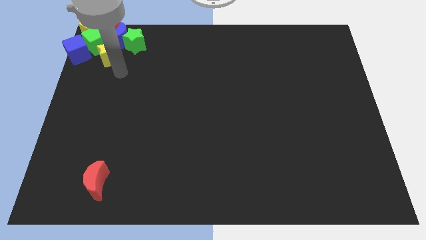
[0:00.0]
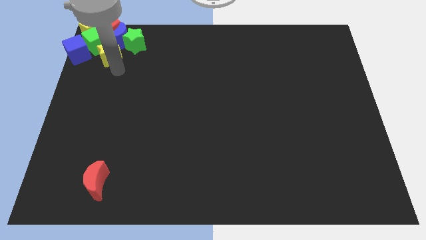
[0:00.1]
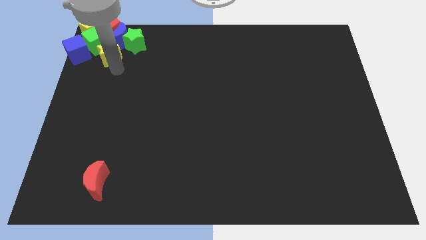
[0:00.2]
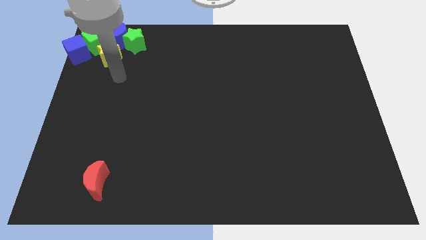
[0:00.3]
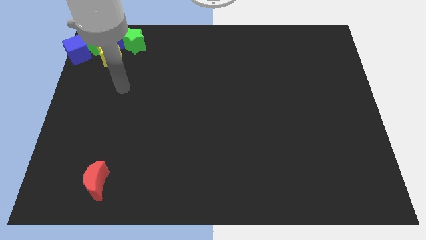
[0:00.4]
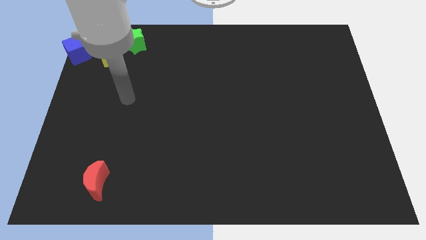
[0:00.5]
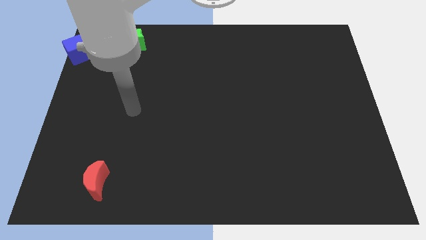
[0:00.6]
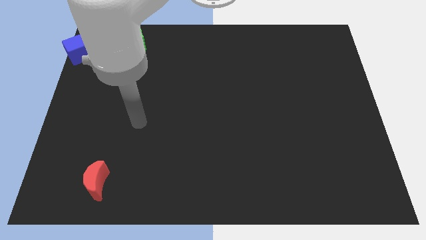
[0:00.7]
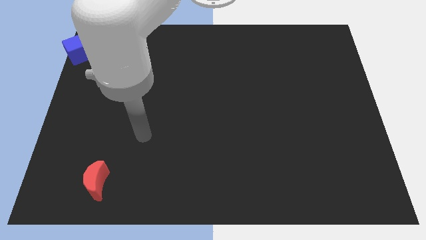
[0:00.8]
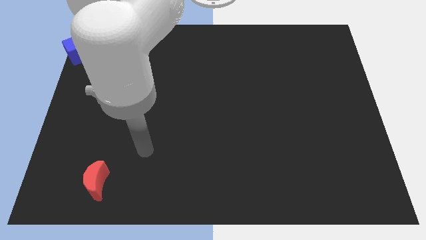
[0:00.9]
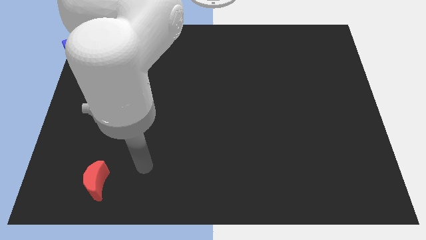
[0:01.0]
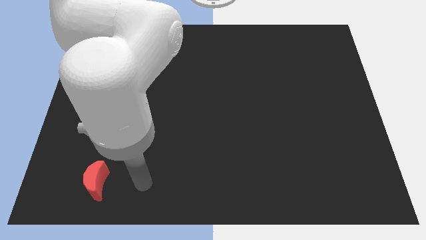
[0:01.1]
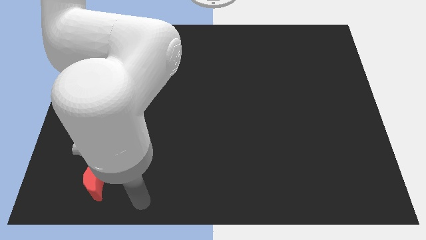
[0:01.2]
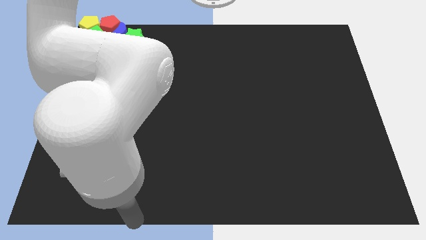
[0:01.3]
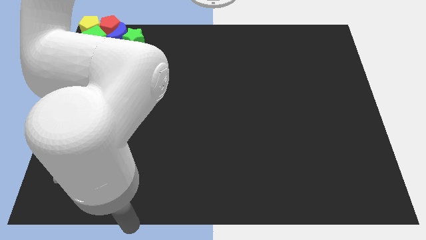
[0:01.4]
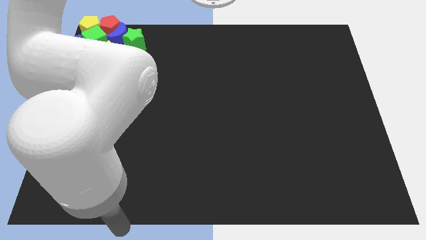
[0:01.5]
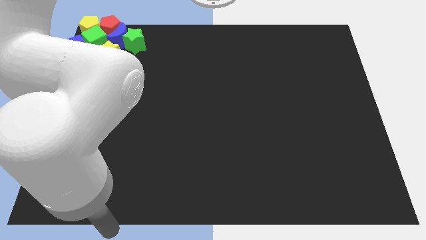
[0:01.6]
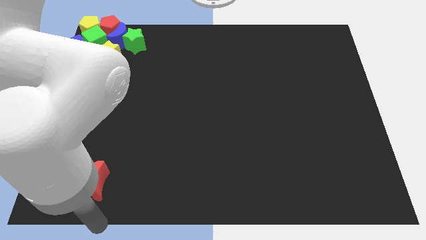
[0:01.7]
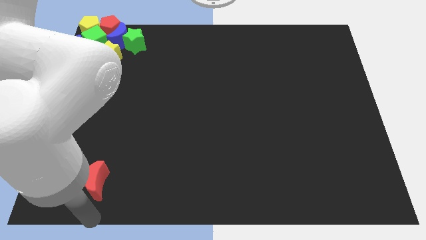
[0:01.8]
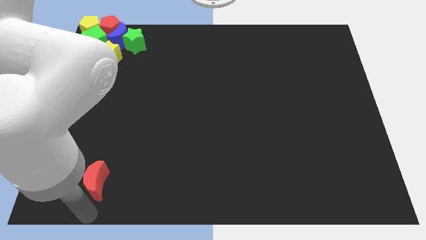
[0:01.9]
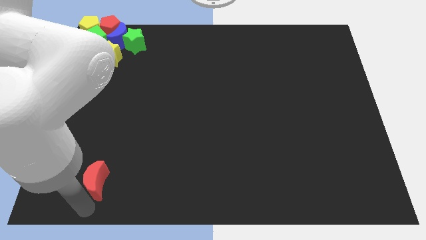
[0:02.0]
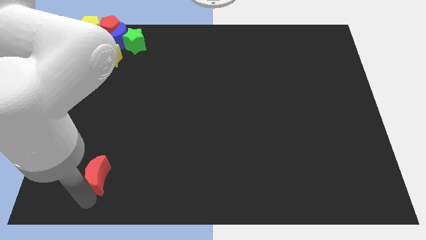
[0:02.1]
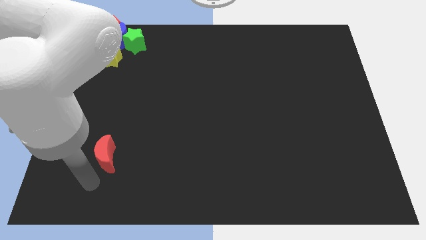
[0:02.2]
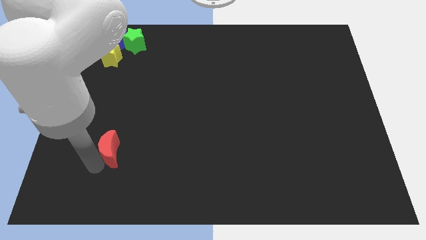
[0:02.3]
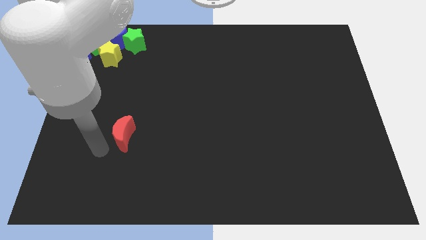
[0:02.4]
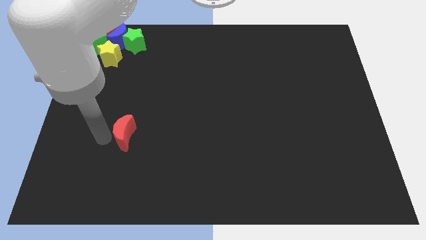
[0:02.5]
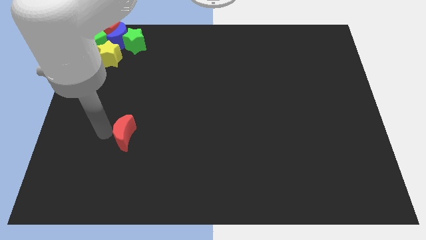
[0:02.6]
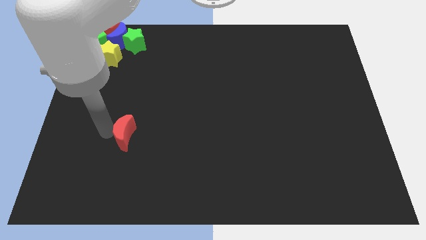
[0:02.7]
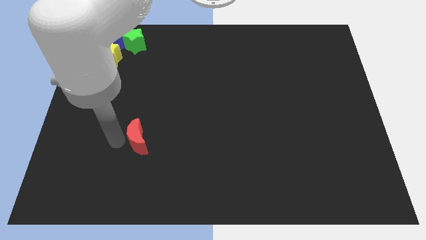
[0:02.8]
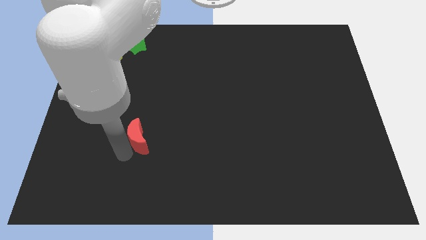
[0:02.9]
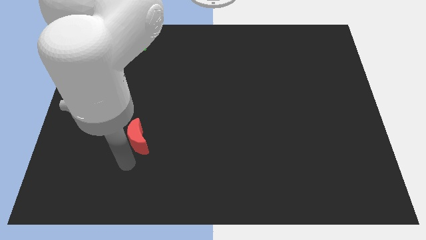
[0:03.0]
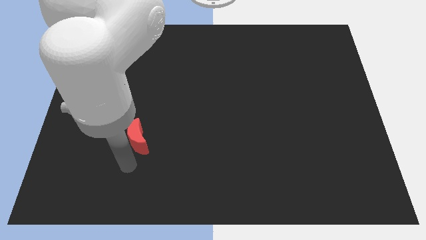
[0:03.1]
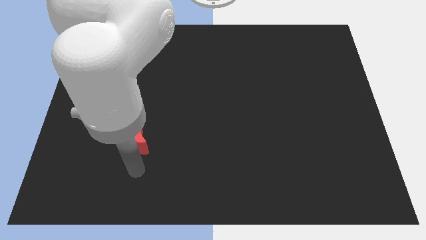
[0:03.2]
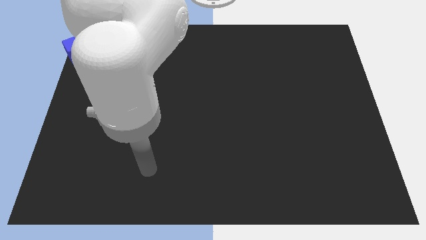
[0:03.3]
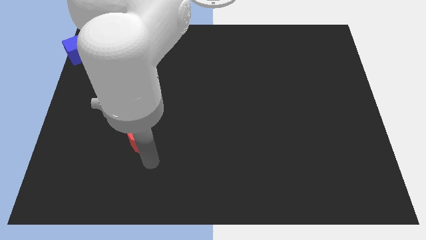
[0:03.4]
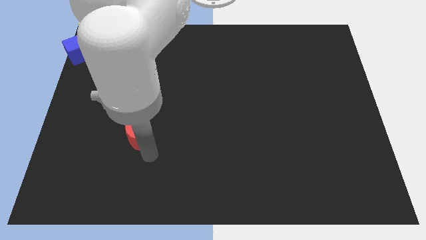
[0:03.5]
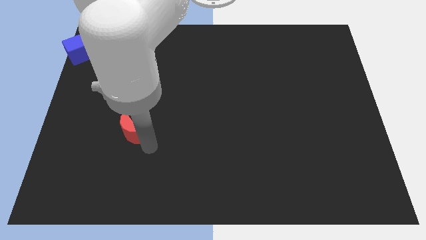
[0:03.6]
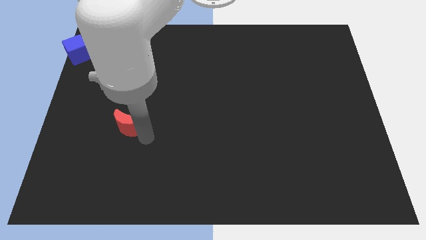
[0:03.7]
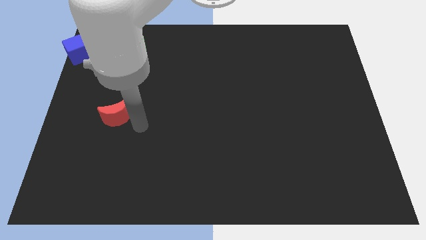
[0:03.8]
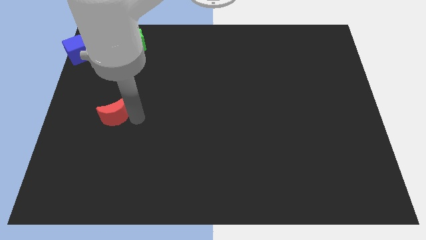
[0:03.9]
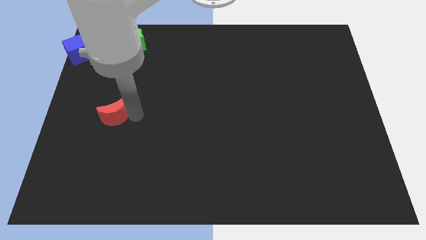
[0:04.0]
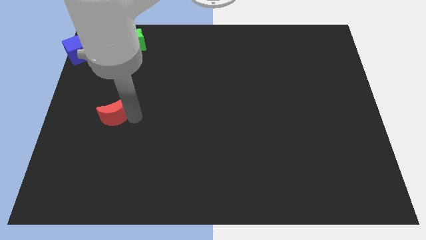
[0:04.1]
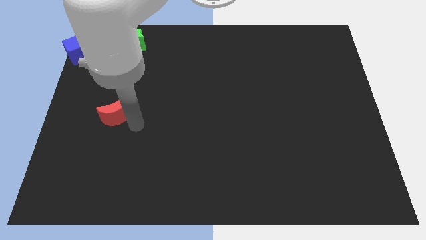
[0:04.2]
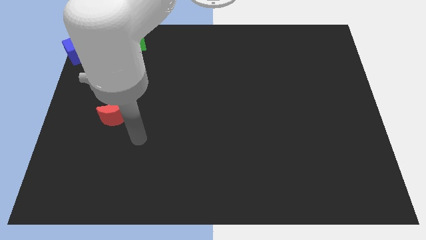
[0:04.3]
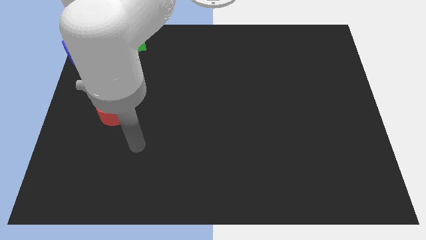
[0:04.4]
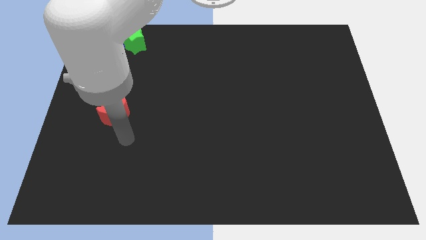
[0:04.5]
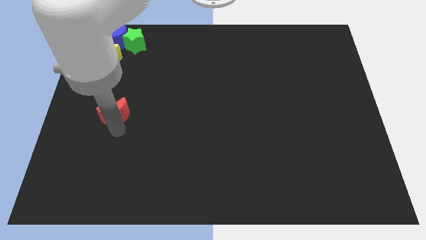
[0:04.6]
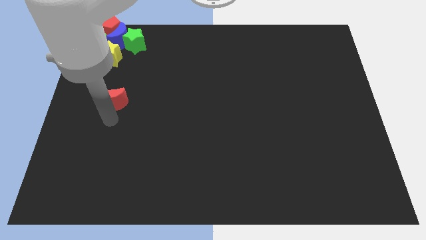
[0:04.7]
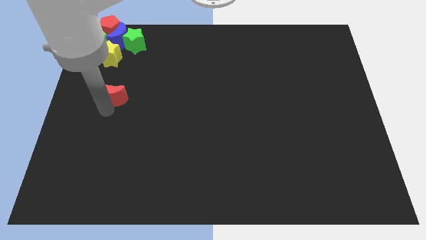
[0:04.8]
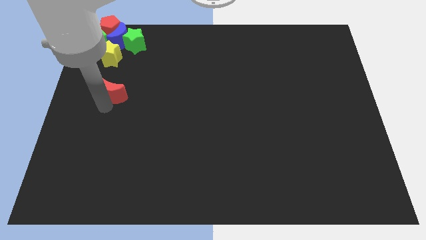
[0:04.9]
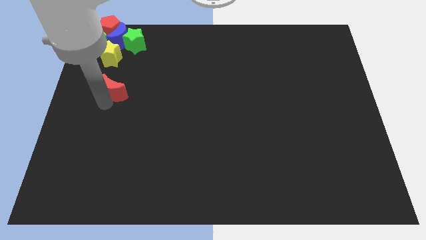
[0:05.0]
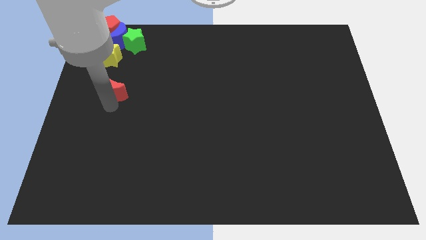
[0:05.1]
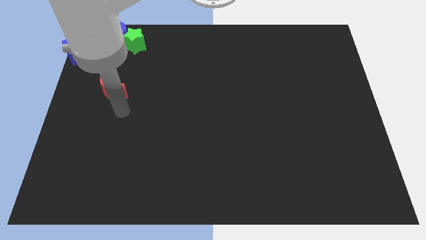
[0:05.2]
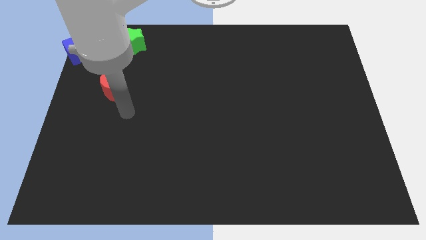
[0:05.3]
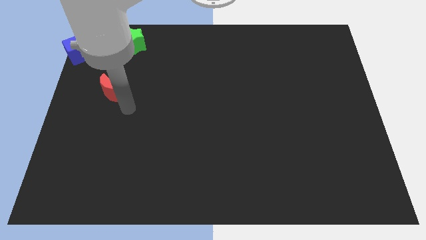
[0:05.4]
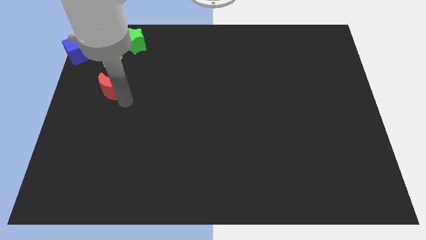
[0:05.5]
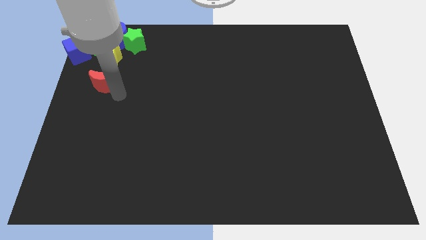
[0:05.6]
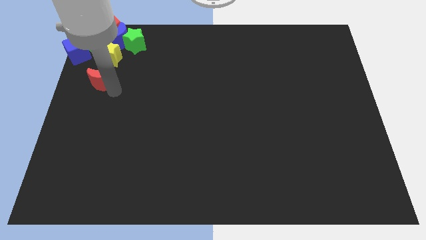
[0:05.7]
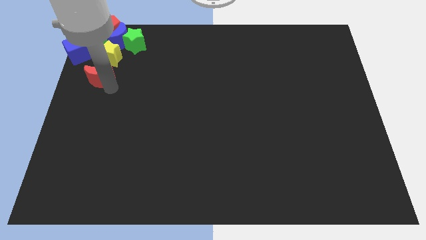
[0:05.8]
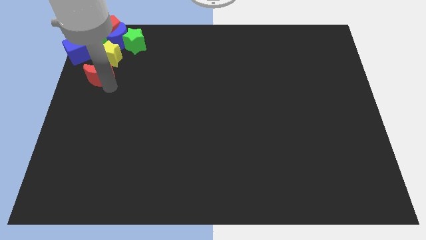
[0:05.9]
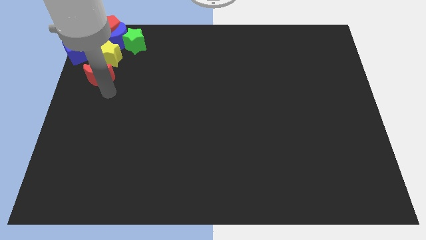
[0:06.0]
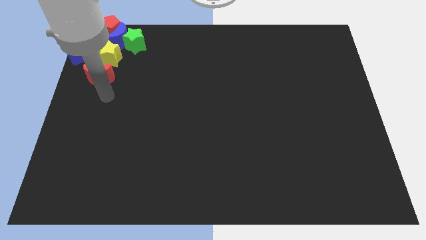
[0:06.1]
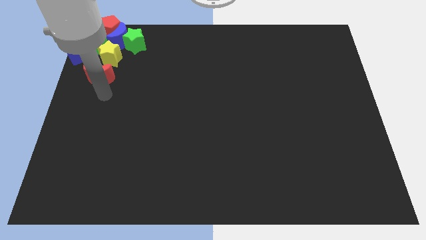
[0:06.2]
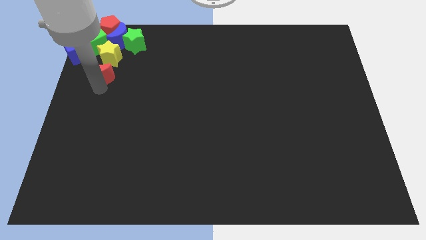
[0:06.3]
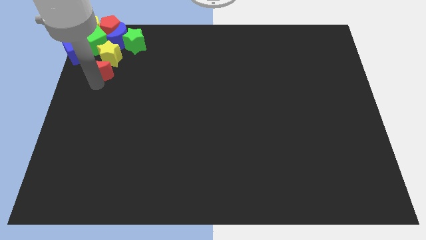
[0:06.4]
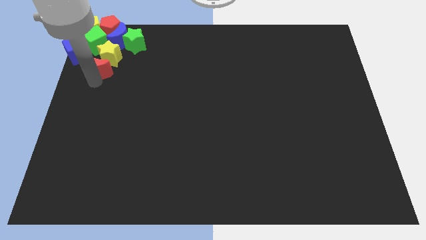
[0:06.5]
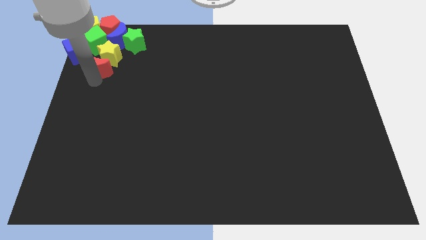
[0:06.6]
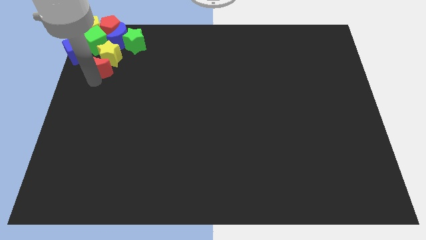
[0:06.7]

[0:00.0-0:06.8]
push red pentagon into group of blocks

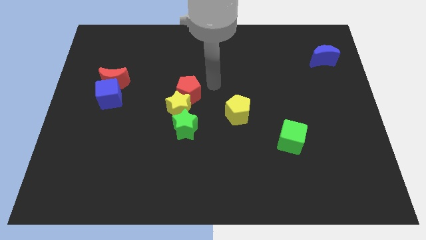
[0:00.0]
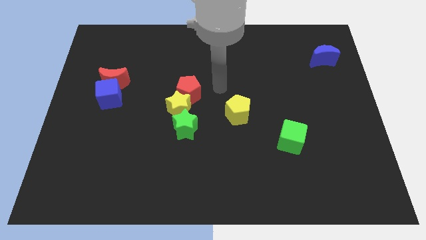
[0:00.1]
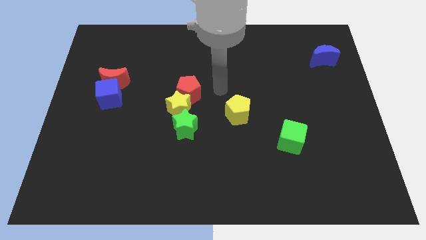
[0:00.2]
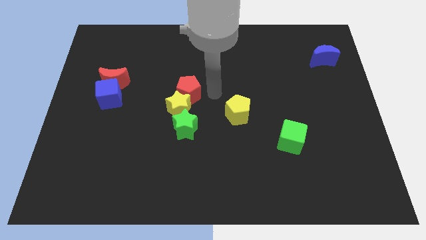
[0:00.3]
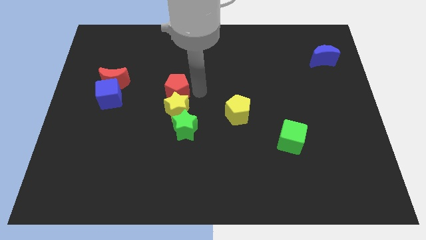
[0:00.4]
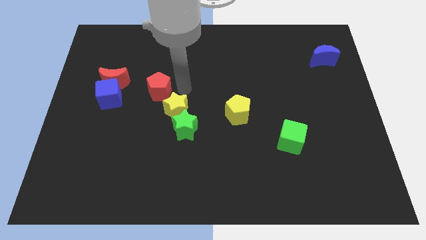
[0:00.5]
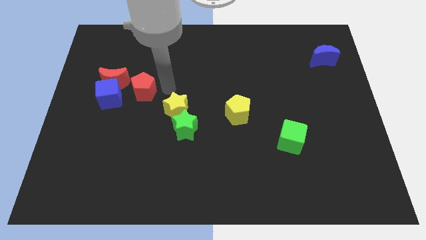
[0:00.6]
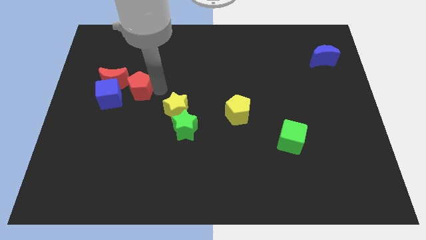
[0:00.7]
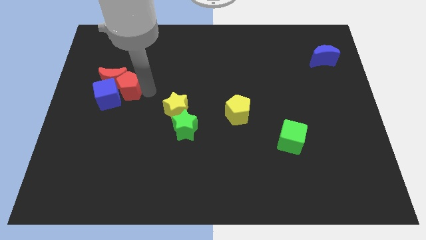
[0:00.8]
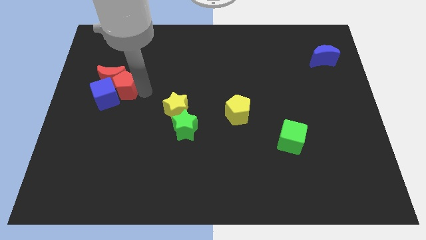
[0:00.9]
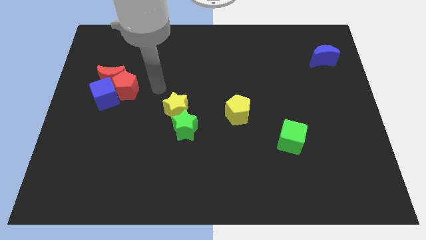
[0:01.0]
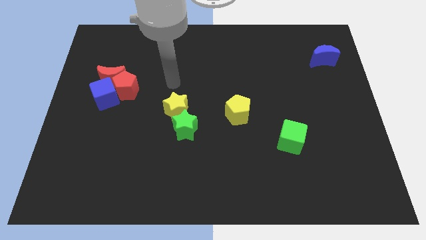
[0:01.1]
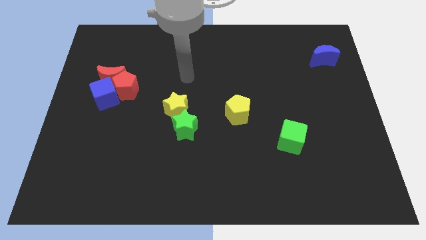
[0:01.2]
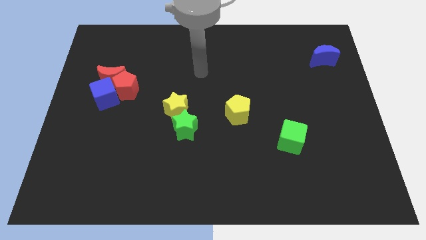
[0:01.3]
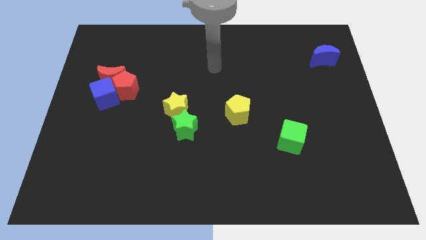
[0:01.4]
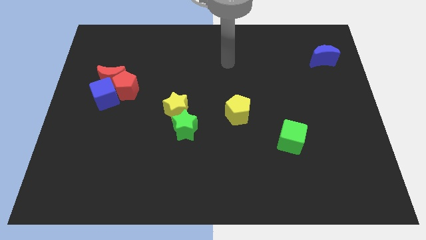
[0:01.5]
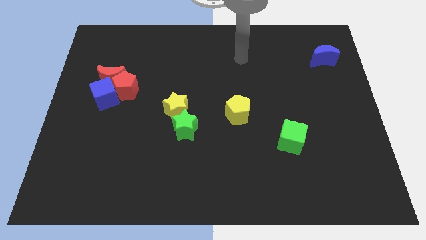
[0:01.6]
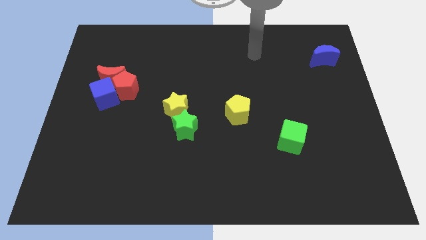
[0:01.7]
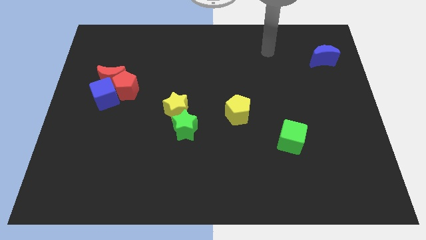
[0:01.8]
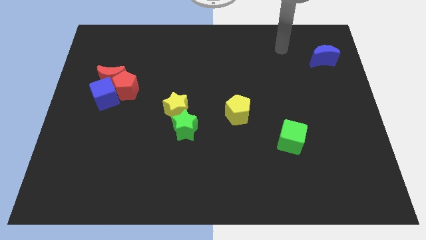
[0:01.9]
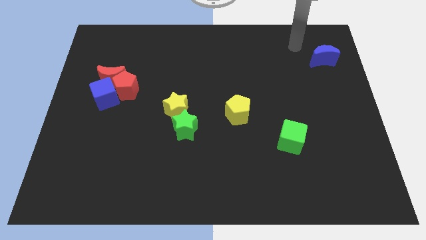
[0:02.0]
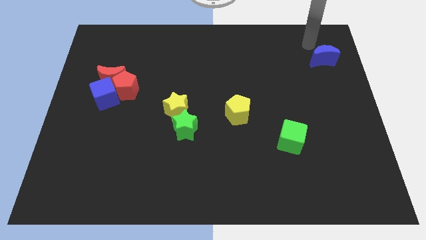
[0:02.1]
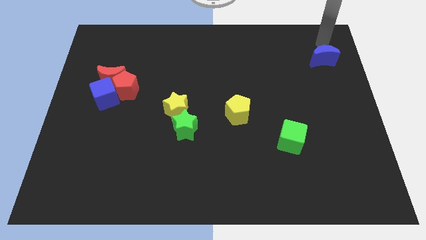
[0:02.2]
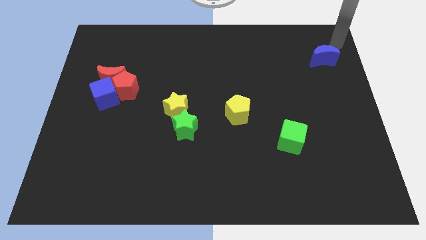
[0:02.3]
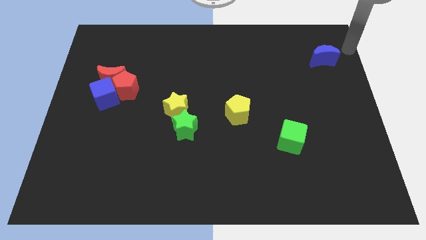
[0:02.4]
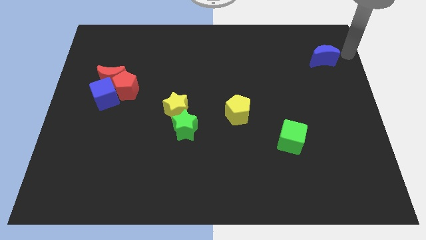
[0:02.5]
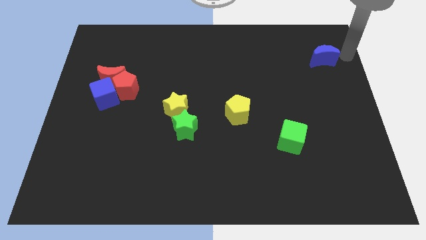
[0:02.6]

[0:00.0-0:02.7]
place your arm towards right side of blue crescent
